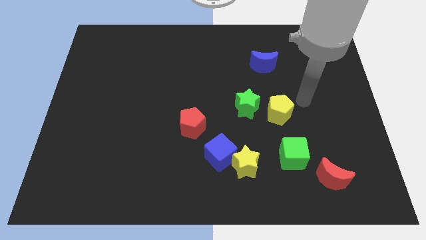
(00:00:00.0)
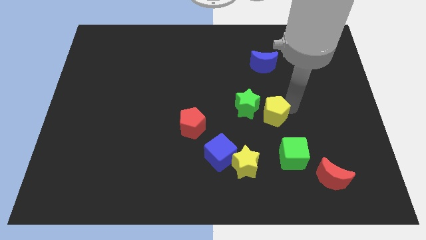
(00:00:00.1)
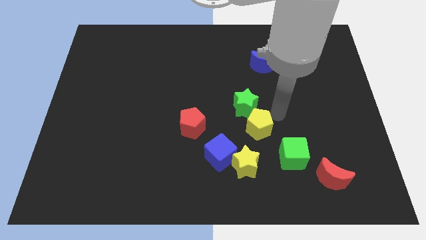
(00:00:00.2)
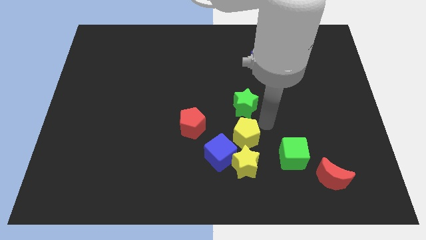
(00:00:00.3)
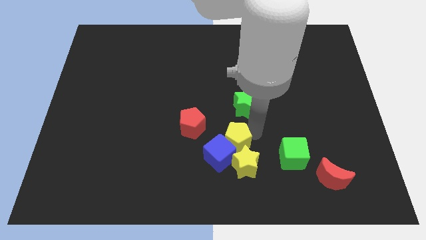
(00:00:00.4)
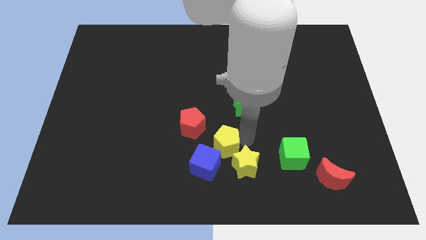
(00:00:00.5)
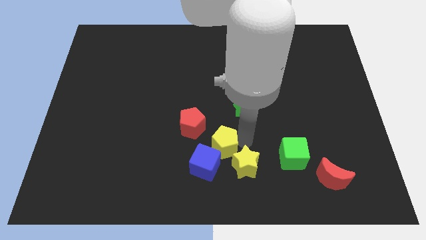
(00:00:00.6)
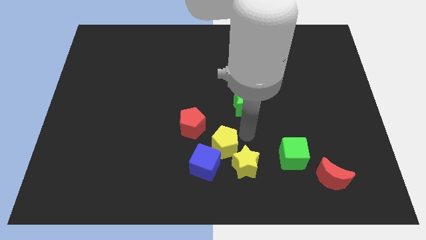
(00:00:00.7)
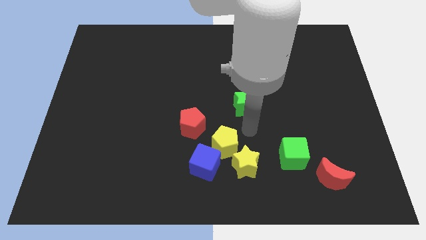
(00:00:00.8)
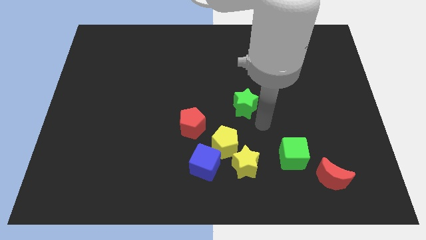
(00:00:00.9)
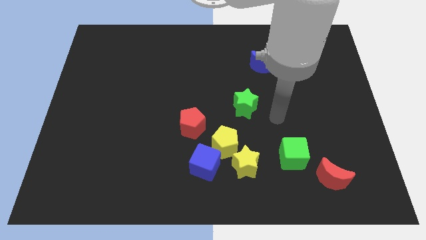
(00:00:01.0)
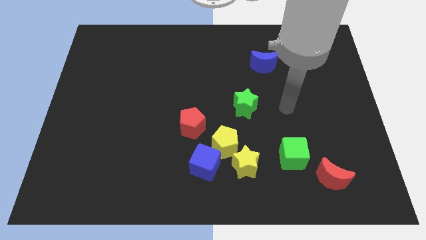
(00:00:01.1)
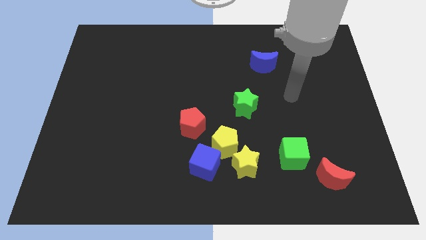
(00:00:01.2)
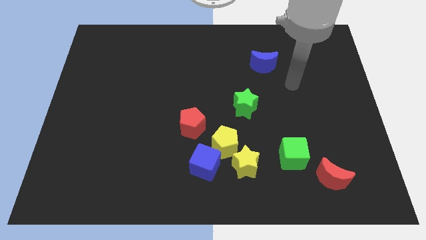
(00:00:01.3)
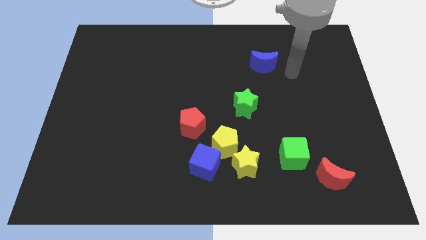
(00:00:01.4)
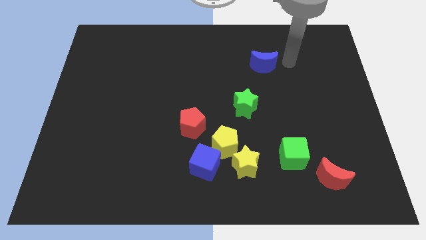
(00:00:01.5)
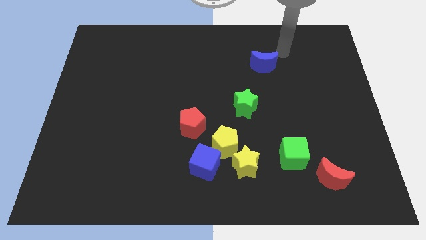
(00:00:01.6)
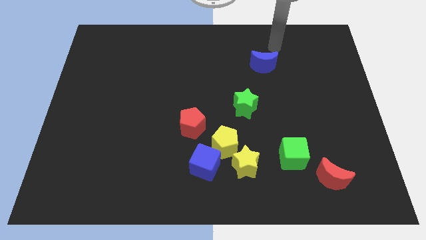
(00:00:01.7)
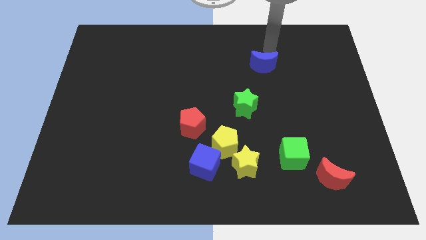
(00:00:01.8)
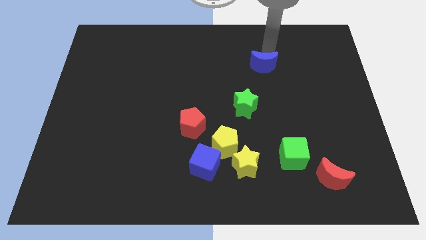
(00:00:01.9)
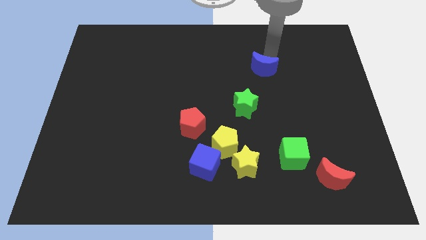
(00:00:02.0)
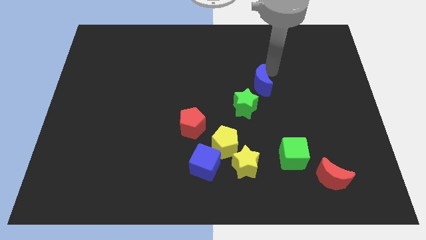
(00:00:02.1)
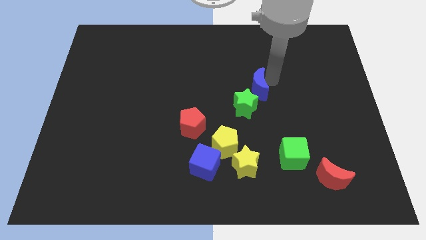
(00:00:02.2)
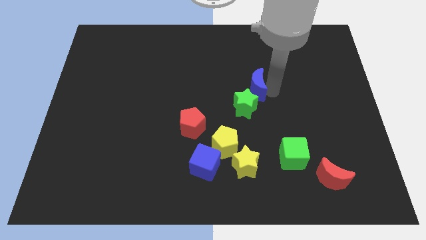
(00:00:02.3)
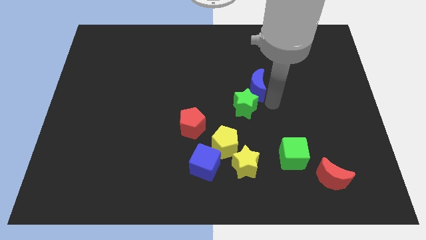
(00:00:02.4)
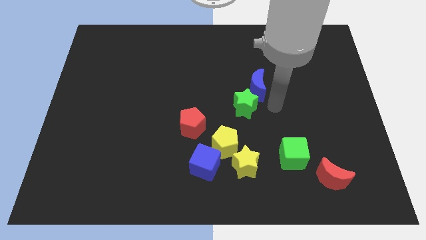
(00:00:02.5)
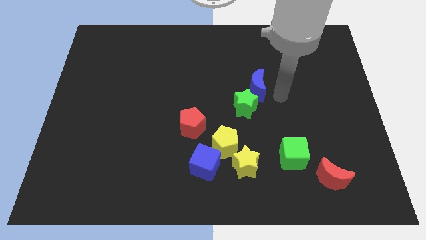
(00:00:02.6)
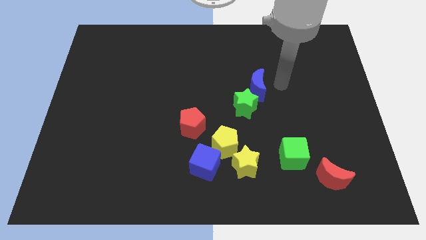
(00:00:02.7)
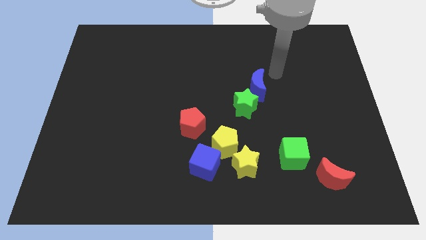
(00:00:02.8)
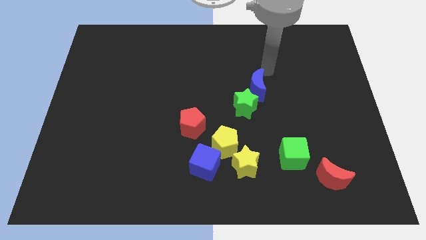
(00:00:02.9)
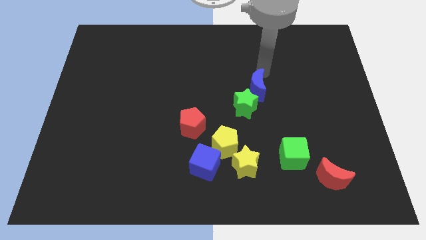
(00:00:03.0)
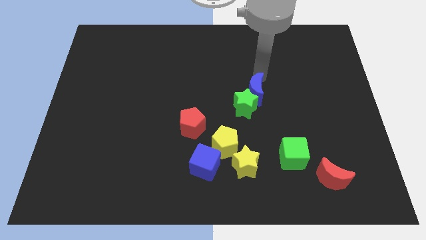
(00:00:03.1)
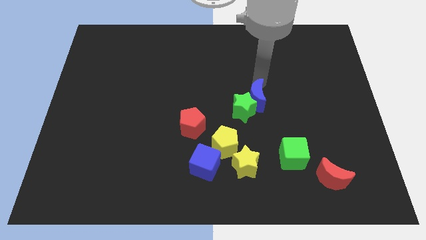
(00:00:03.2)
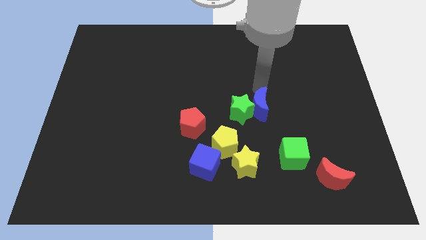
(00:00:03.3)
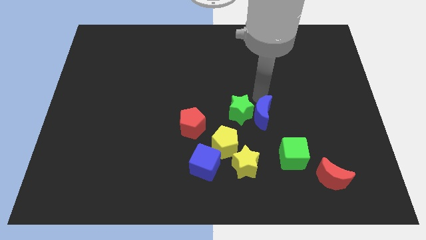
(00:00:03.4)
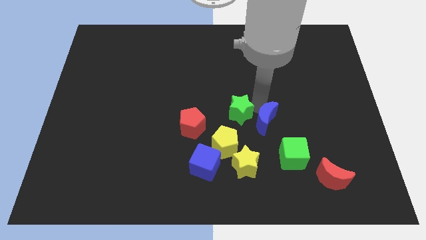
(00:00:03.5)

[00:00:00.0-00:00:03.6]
push the blue moon into the green star

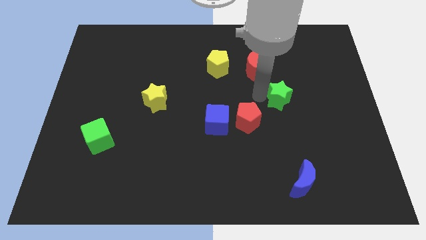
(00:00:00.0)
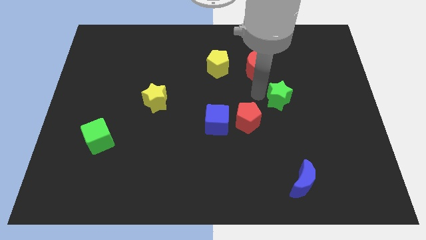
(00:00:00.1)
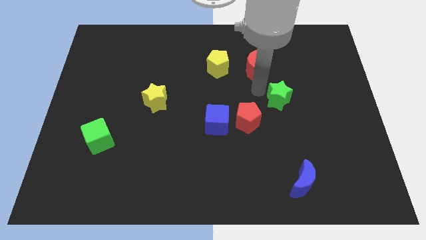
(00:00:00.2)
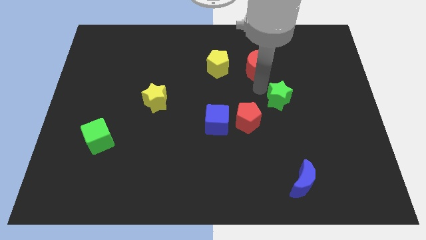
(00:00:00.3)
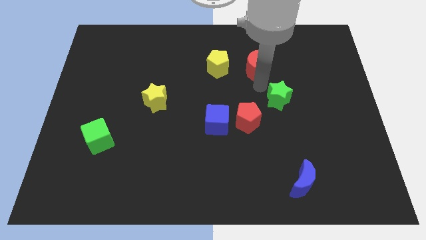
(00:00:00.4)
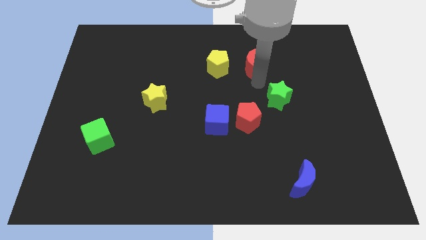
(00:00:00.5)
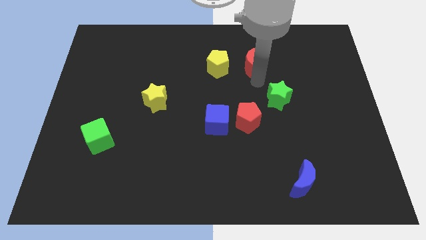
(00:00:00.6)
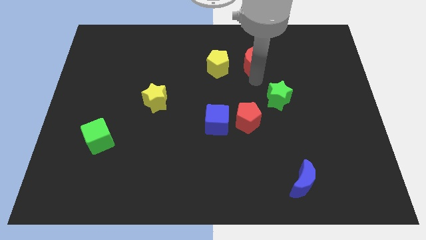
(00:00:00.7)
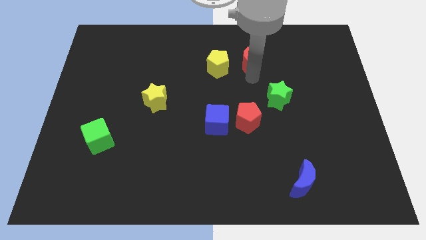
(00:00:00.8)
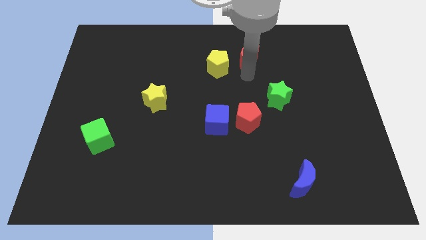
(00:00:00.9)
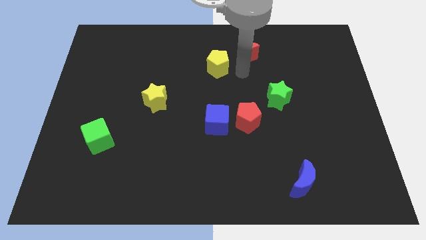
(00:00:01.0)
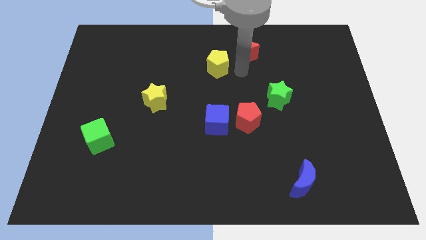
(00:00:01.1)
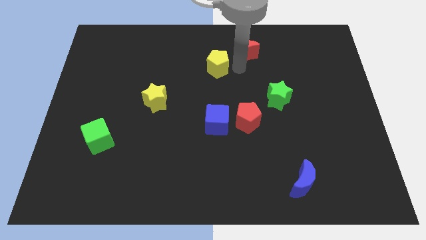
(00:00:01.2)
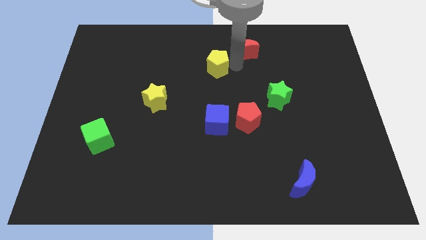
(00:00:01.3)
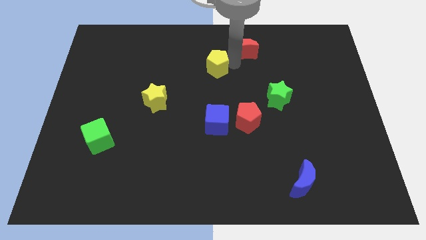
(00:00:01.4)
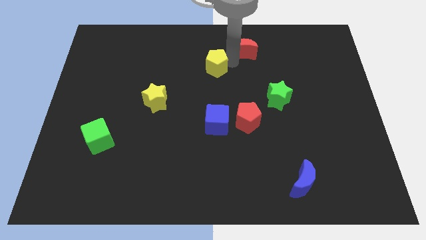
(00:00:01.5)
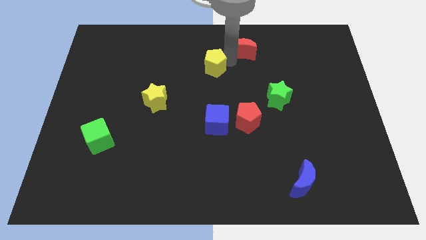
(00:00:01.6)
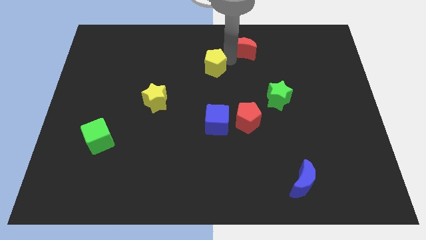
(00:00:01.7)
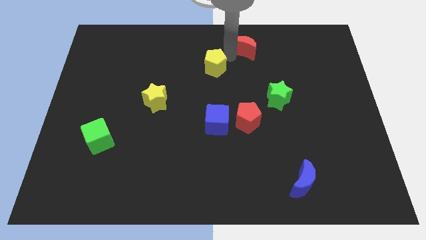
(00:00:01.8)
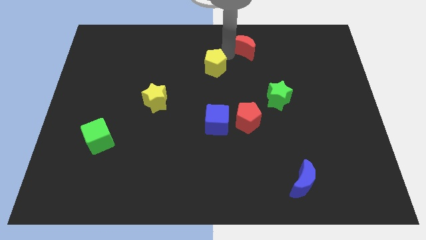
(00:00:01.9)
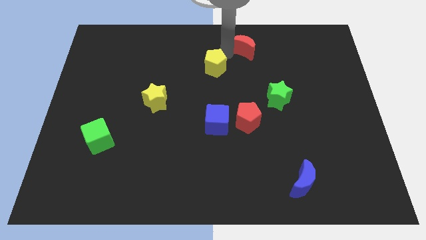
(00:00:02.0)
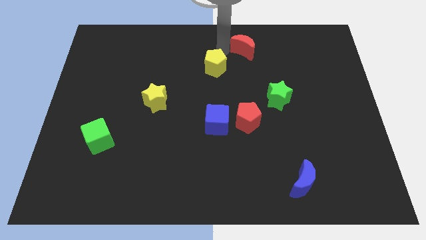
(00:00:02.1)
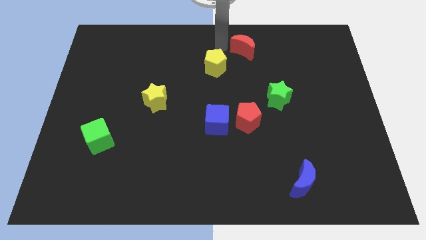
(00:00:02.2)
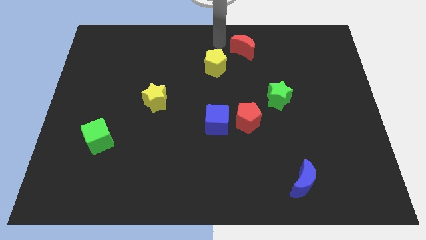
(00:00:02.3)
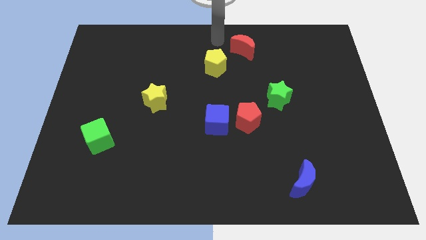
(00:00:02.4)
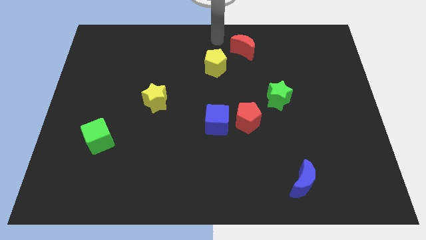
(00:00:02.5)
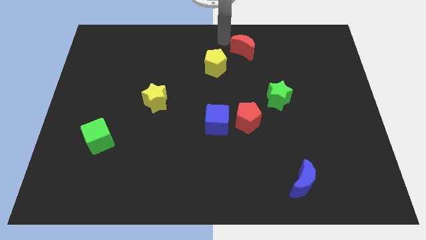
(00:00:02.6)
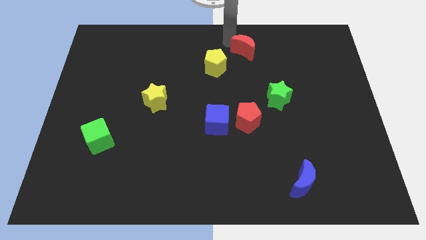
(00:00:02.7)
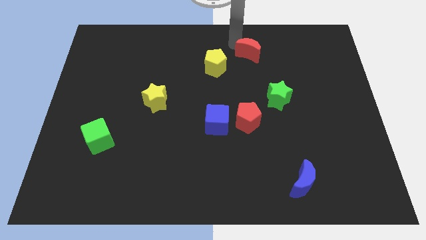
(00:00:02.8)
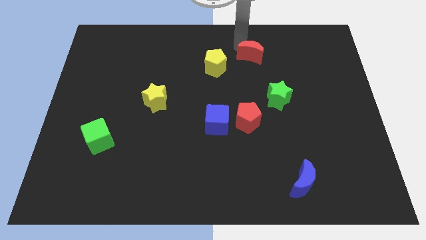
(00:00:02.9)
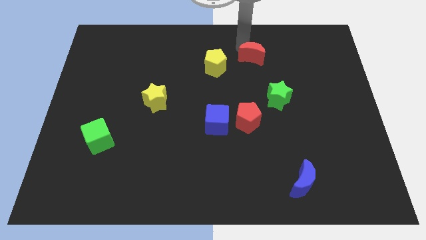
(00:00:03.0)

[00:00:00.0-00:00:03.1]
move the red crescent slightly upwards

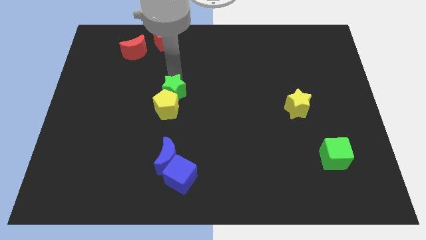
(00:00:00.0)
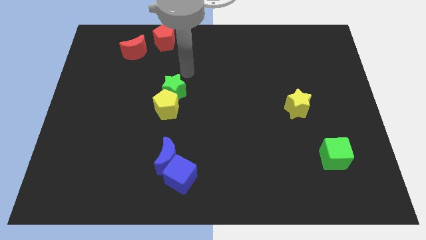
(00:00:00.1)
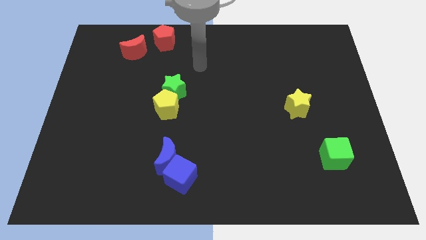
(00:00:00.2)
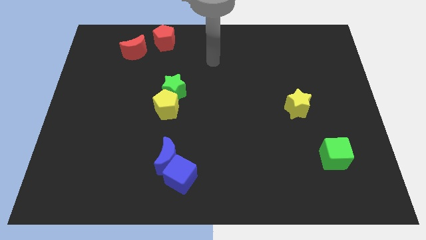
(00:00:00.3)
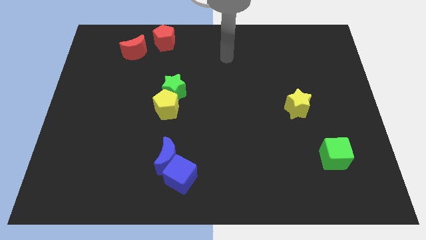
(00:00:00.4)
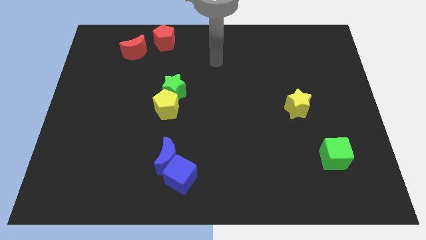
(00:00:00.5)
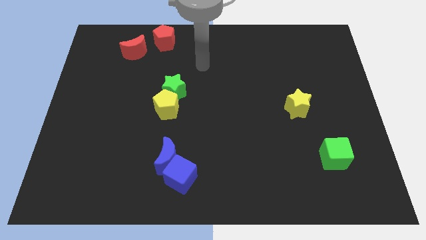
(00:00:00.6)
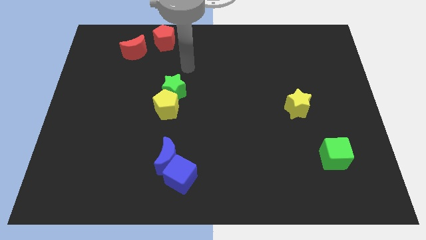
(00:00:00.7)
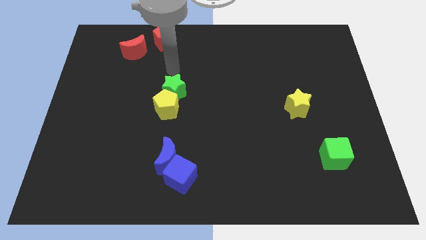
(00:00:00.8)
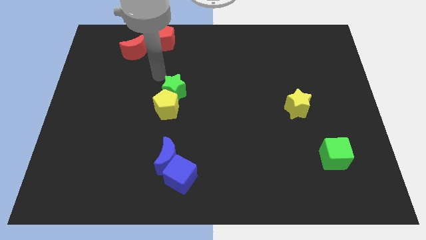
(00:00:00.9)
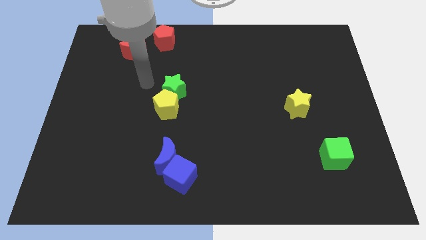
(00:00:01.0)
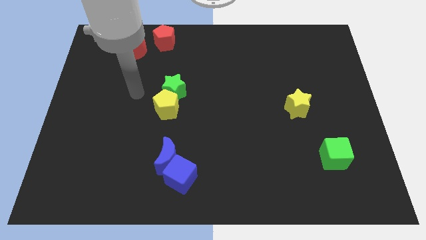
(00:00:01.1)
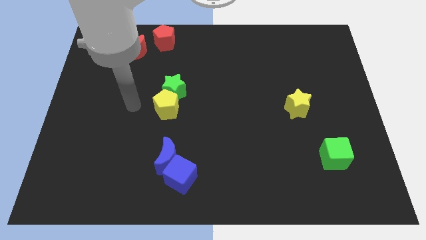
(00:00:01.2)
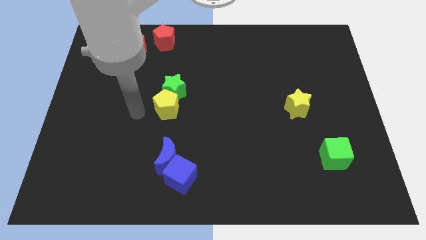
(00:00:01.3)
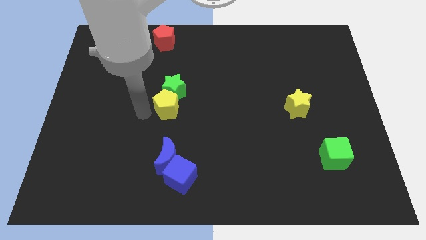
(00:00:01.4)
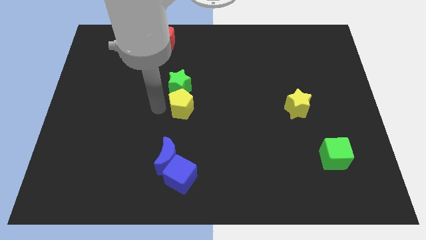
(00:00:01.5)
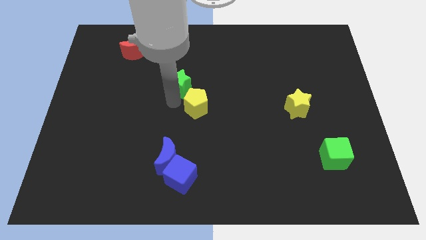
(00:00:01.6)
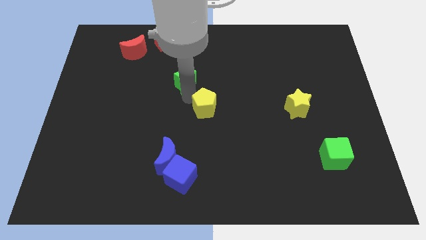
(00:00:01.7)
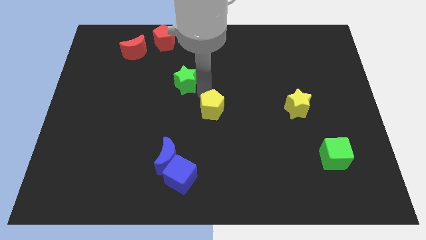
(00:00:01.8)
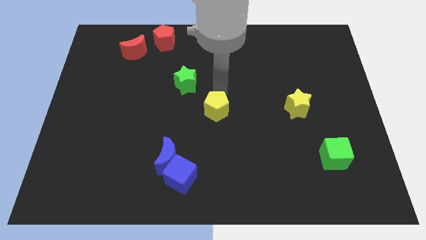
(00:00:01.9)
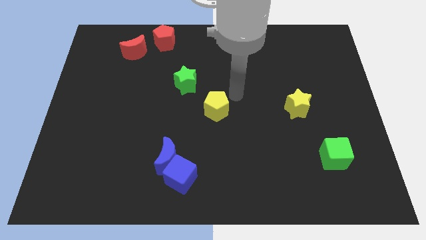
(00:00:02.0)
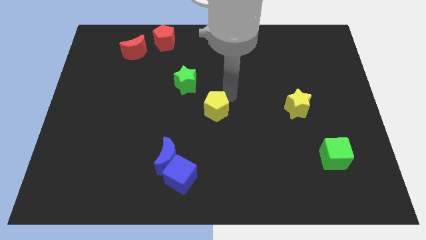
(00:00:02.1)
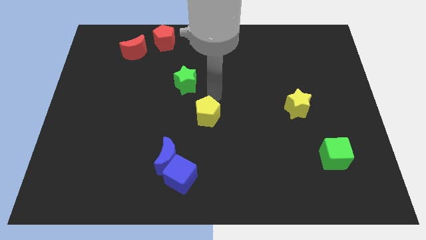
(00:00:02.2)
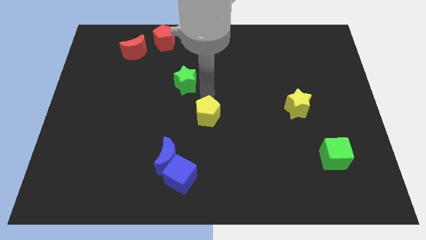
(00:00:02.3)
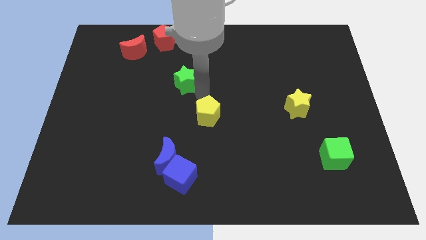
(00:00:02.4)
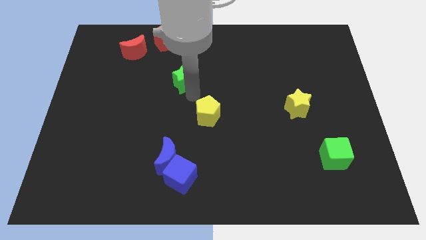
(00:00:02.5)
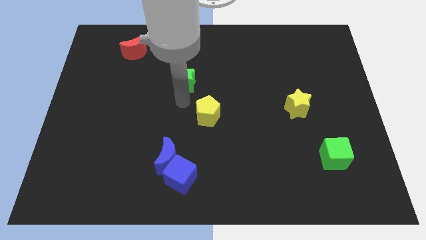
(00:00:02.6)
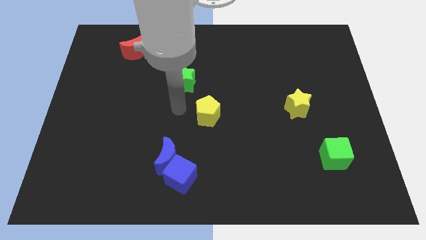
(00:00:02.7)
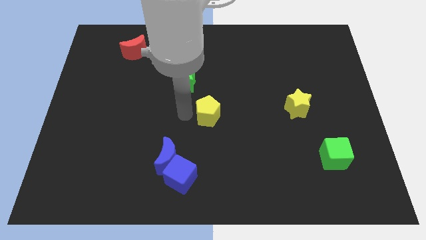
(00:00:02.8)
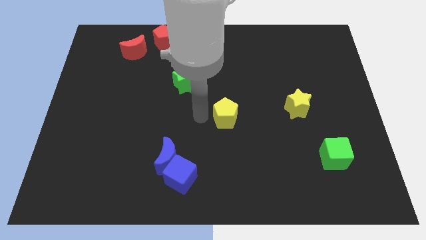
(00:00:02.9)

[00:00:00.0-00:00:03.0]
separate yellow pentagon from the green star
